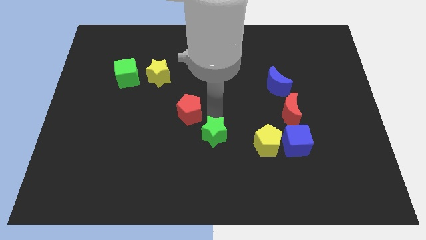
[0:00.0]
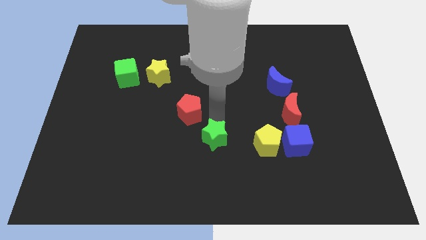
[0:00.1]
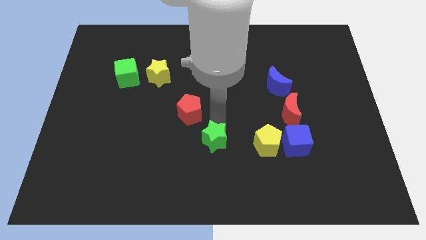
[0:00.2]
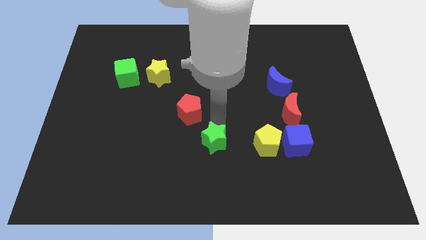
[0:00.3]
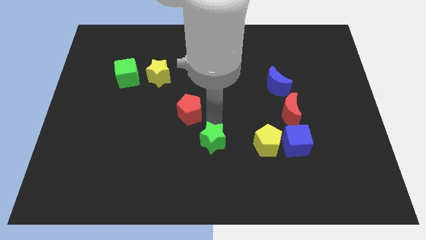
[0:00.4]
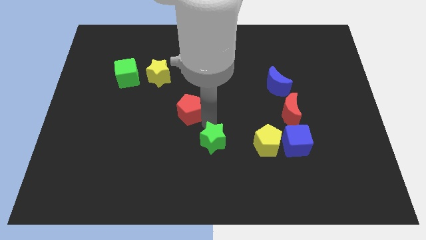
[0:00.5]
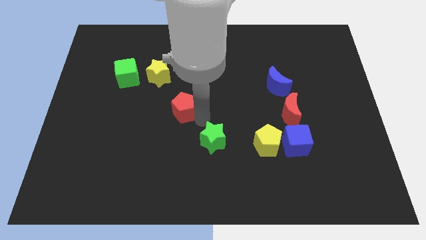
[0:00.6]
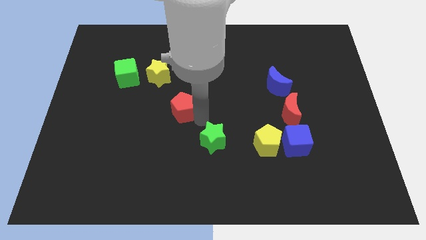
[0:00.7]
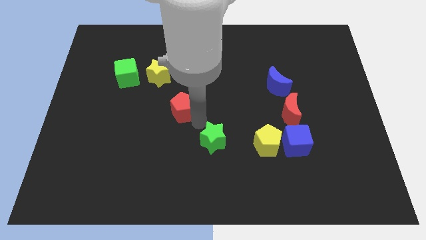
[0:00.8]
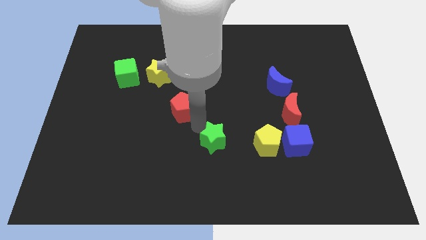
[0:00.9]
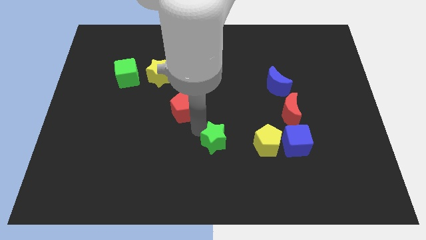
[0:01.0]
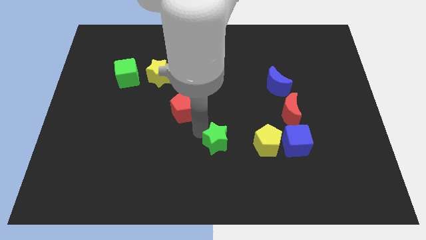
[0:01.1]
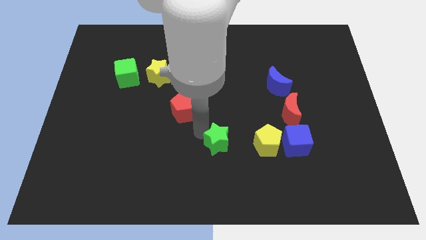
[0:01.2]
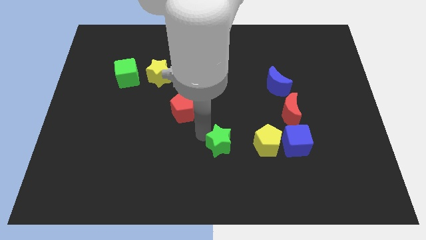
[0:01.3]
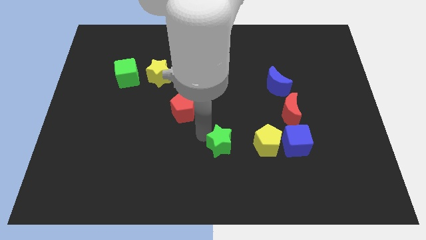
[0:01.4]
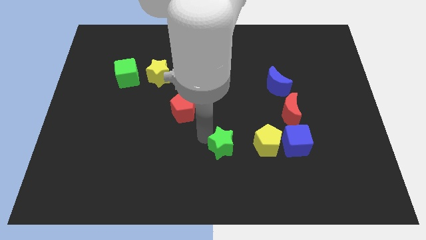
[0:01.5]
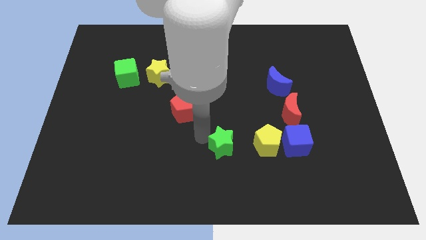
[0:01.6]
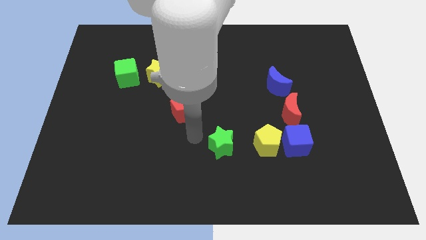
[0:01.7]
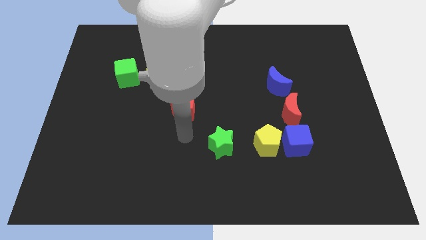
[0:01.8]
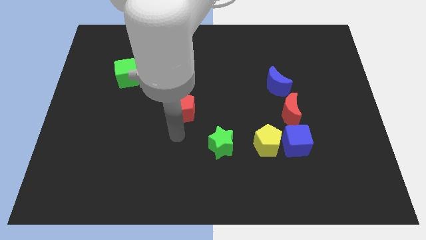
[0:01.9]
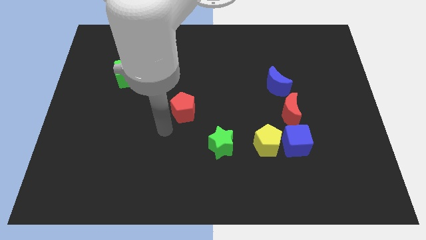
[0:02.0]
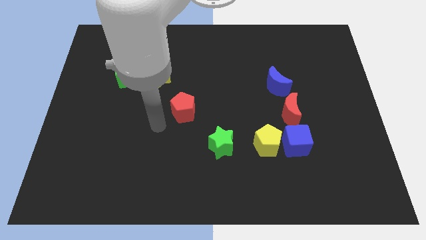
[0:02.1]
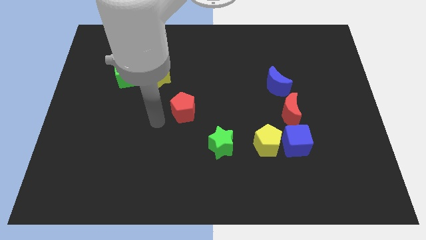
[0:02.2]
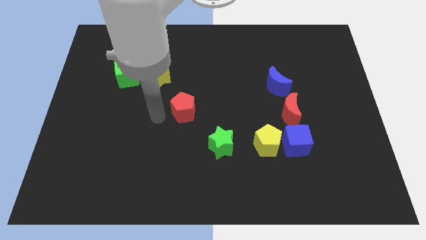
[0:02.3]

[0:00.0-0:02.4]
place the green star parallel to the yellow pentagon

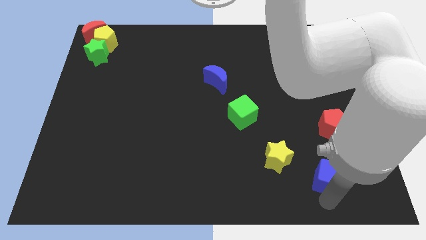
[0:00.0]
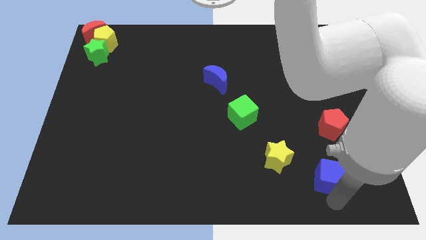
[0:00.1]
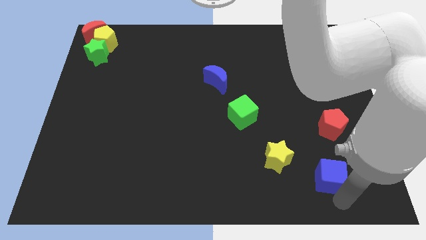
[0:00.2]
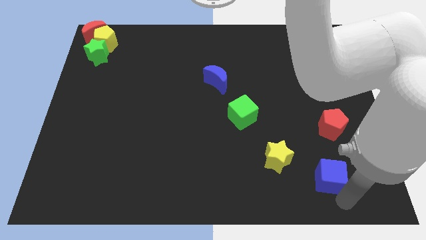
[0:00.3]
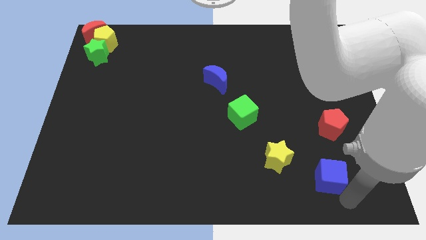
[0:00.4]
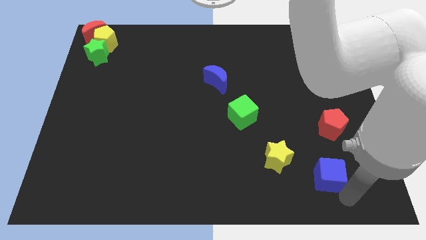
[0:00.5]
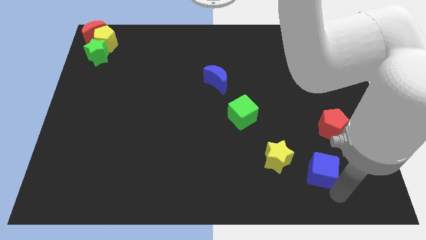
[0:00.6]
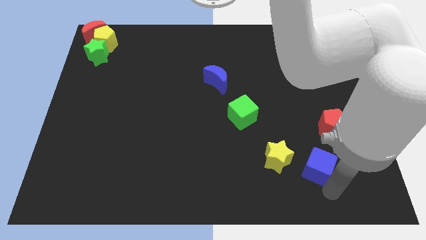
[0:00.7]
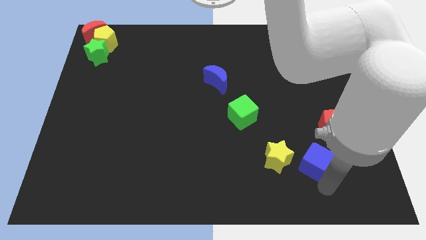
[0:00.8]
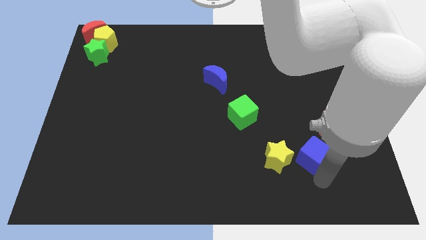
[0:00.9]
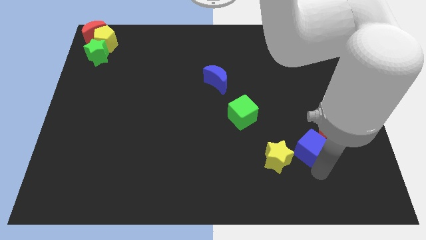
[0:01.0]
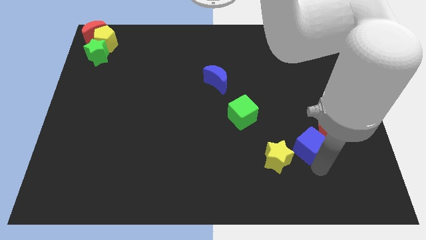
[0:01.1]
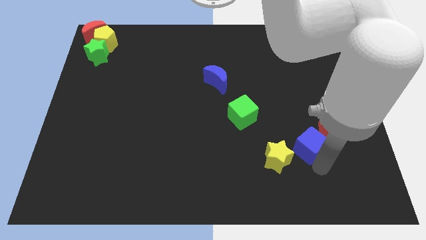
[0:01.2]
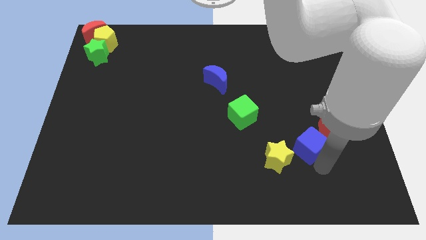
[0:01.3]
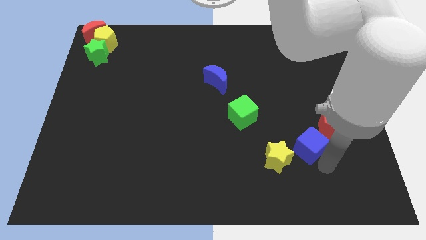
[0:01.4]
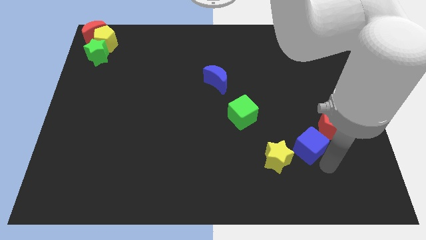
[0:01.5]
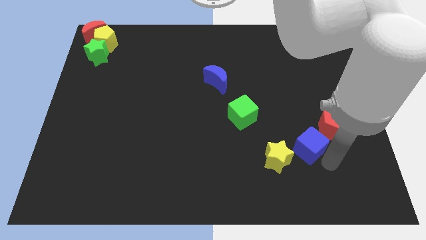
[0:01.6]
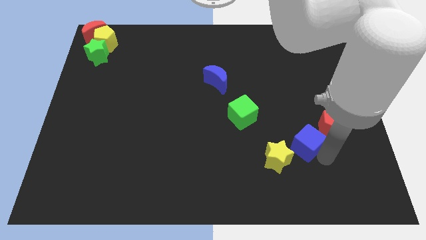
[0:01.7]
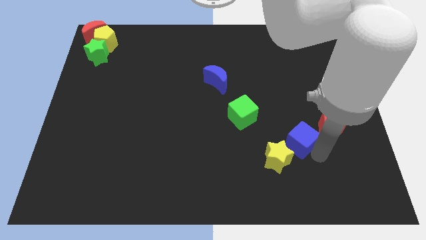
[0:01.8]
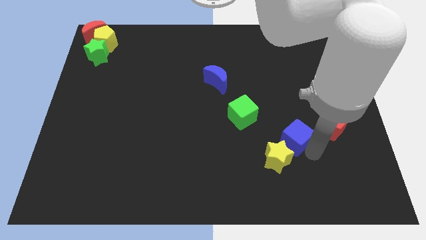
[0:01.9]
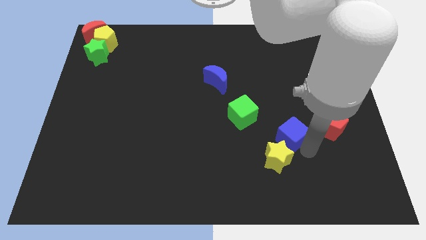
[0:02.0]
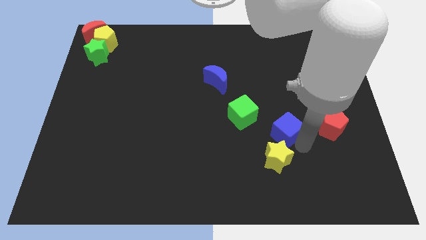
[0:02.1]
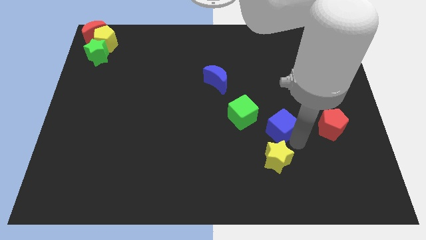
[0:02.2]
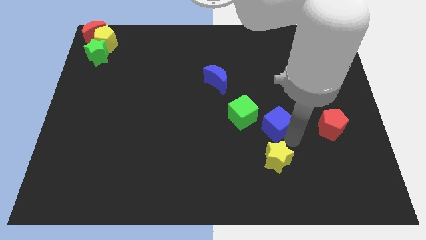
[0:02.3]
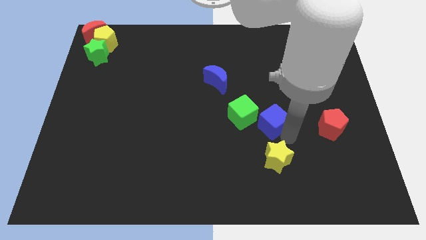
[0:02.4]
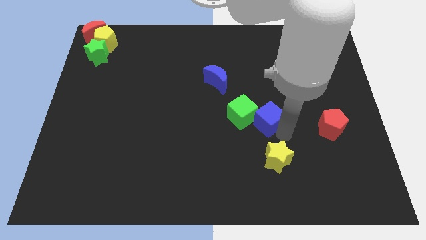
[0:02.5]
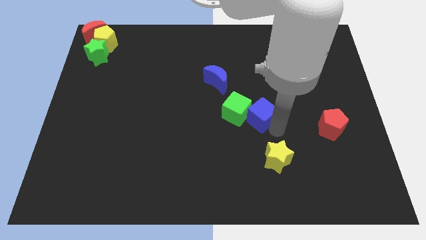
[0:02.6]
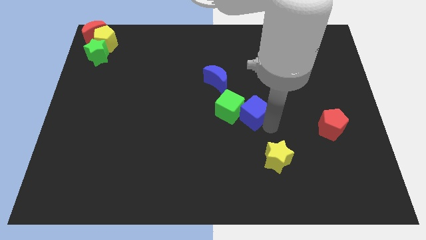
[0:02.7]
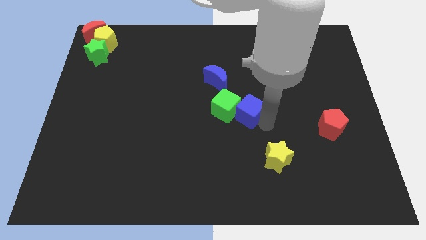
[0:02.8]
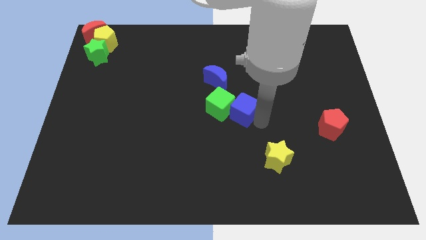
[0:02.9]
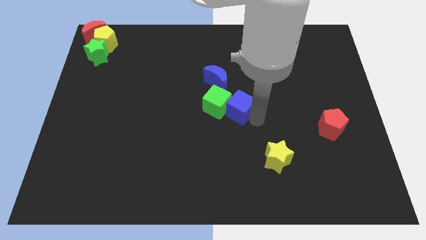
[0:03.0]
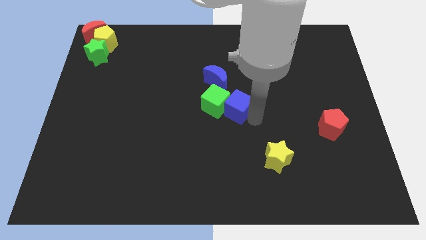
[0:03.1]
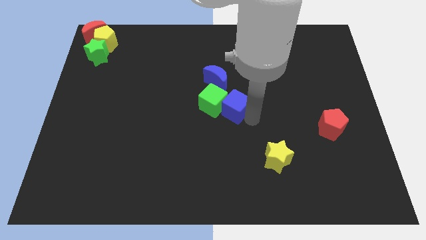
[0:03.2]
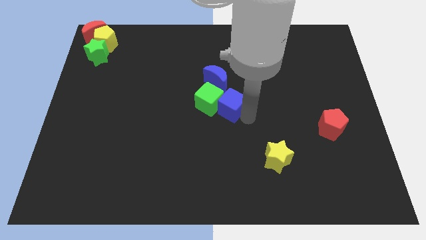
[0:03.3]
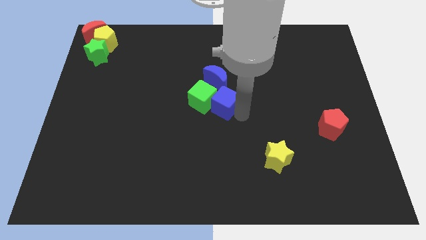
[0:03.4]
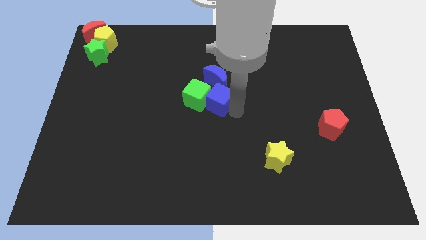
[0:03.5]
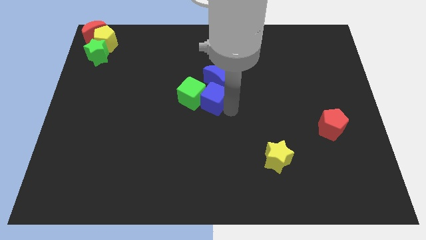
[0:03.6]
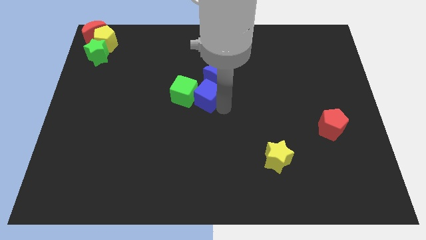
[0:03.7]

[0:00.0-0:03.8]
move the green cube with the blue cube at the center

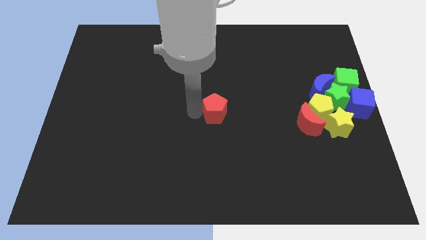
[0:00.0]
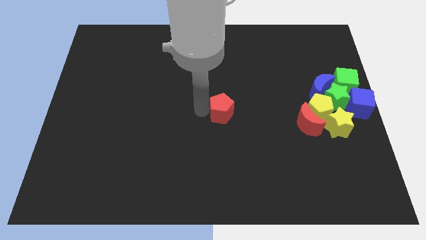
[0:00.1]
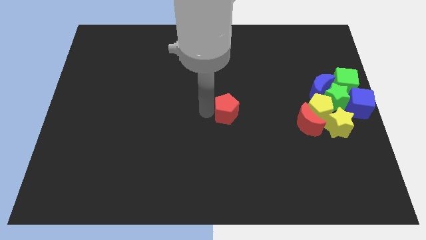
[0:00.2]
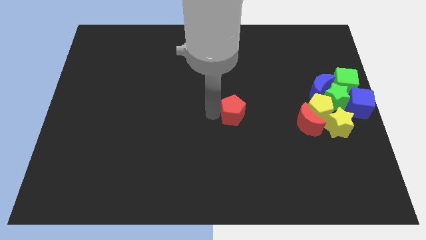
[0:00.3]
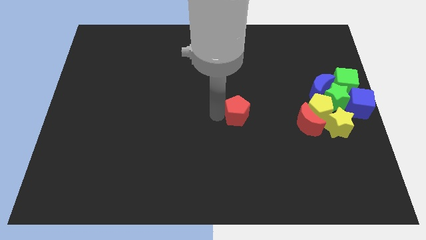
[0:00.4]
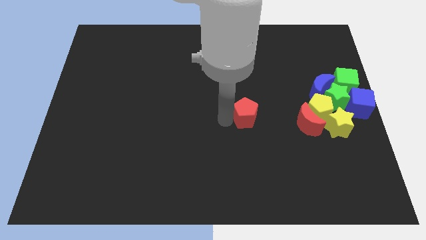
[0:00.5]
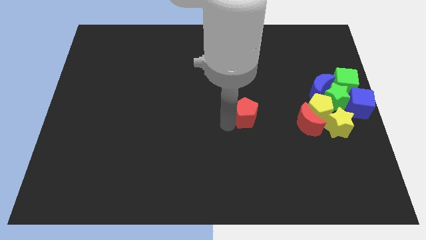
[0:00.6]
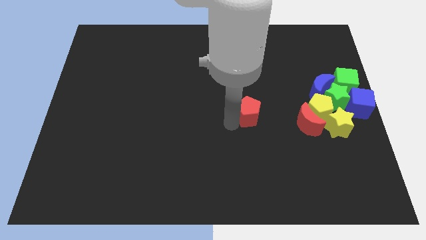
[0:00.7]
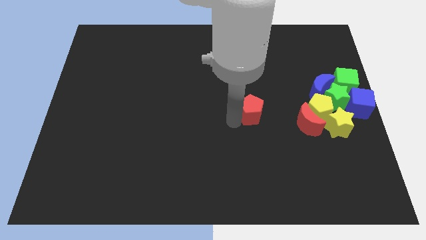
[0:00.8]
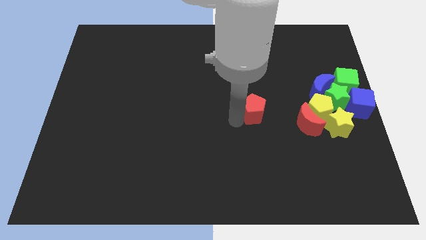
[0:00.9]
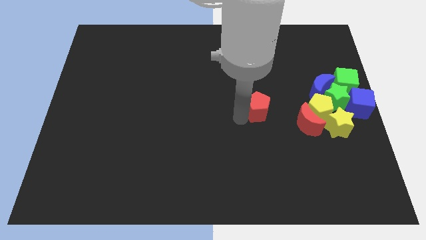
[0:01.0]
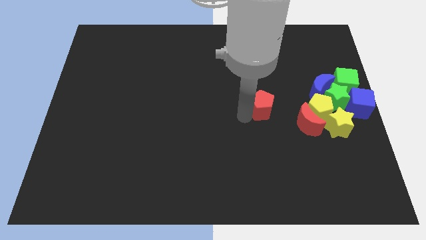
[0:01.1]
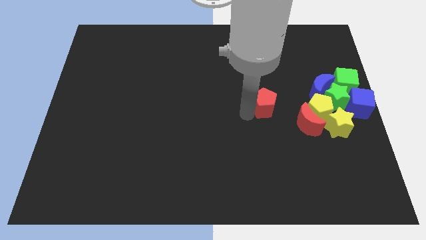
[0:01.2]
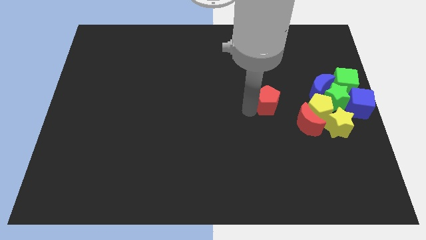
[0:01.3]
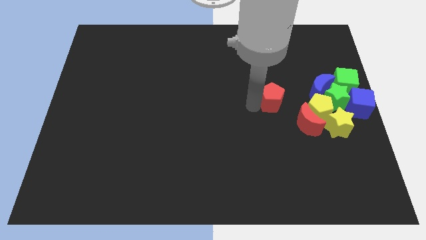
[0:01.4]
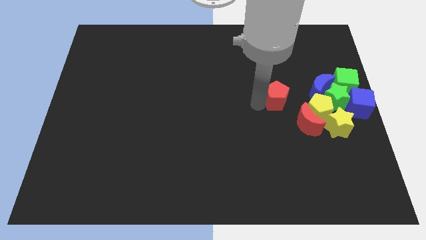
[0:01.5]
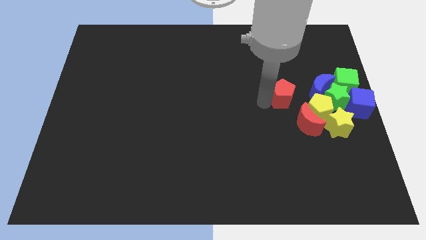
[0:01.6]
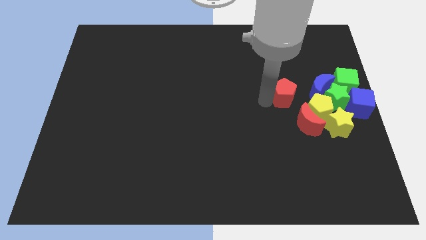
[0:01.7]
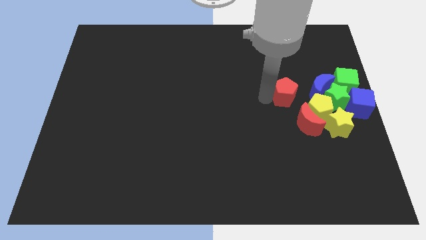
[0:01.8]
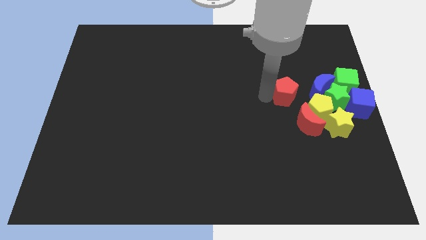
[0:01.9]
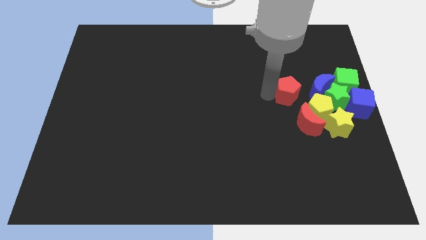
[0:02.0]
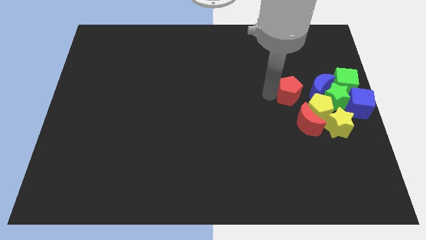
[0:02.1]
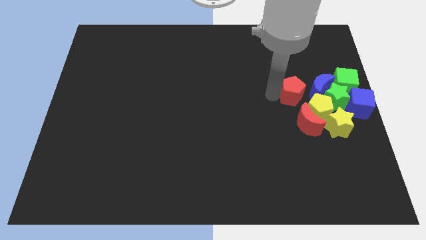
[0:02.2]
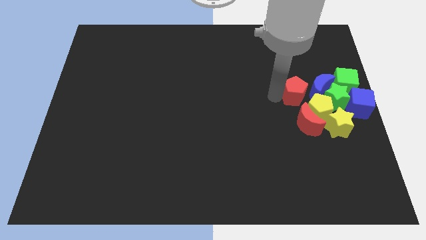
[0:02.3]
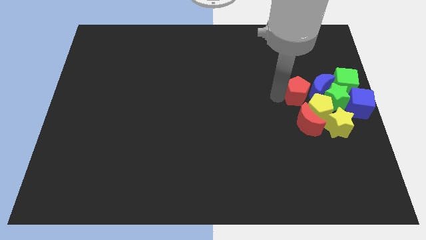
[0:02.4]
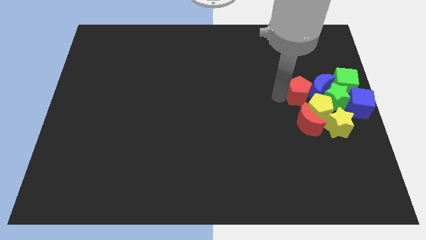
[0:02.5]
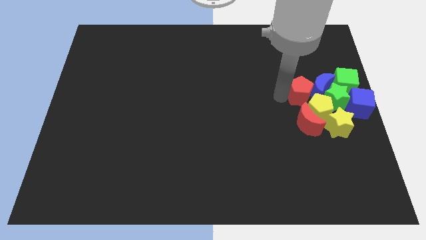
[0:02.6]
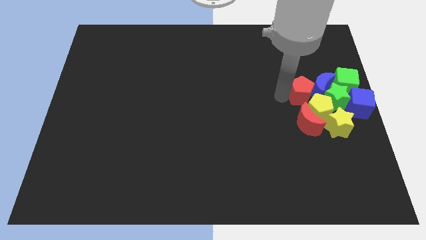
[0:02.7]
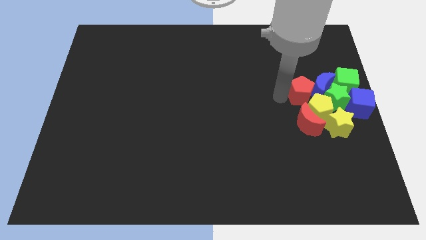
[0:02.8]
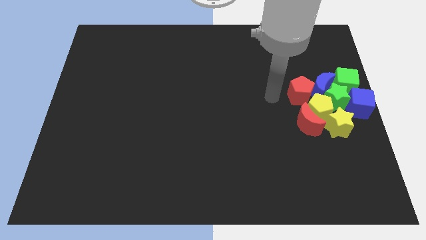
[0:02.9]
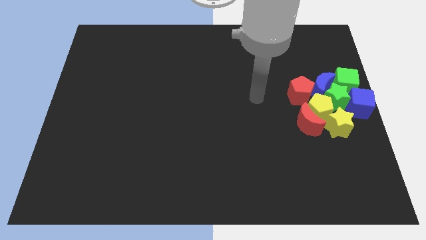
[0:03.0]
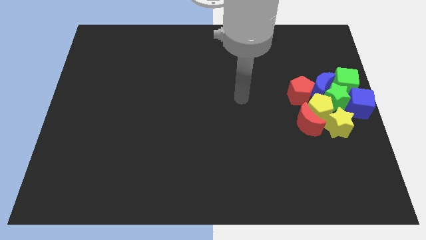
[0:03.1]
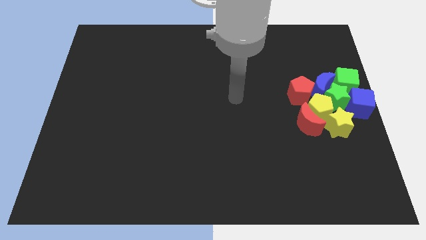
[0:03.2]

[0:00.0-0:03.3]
push the red pentagon towards the group of blocks
